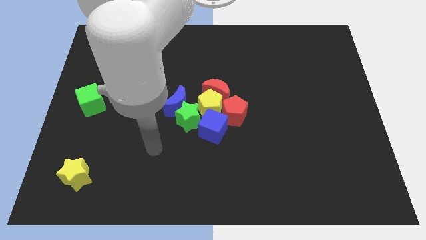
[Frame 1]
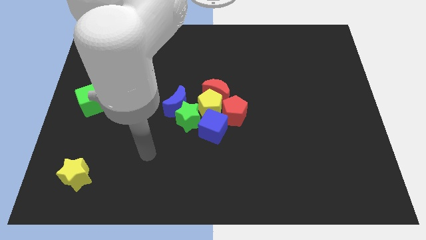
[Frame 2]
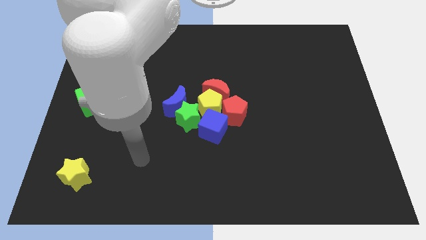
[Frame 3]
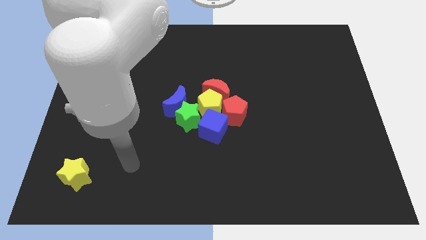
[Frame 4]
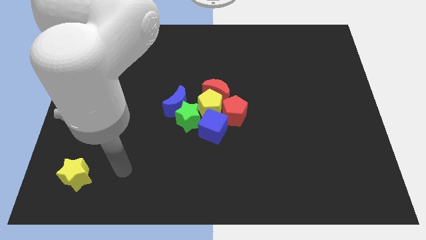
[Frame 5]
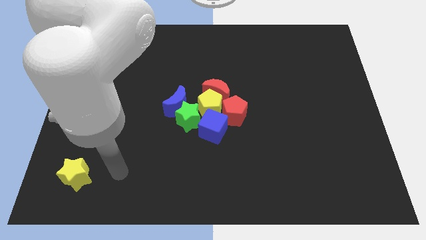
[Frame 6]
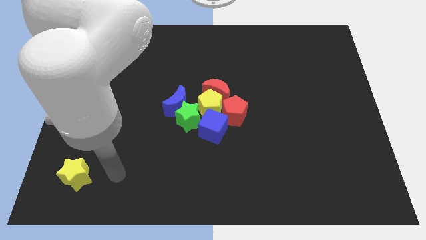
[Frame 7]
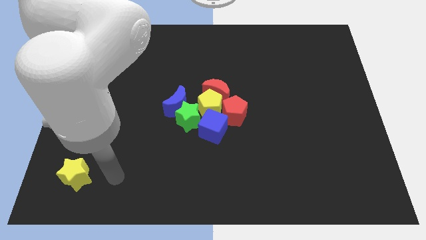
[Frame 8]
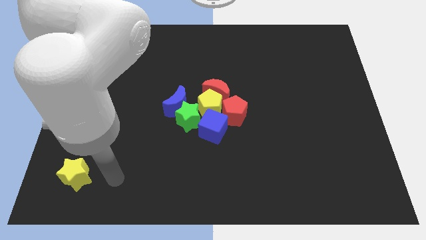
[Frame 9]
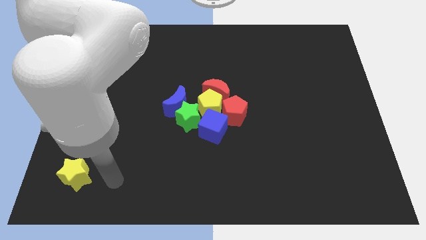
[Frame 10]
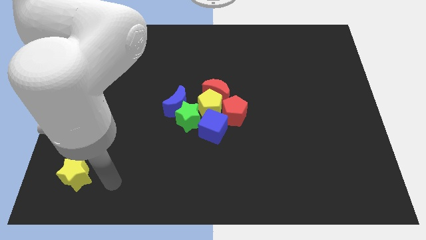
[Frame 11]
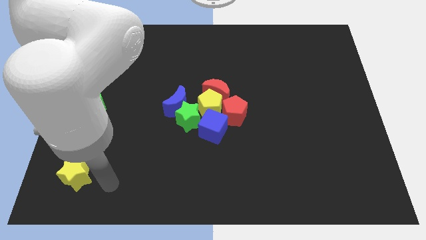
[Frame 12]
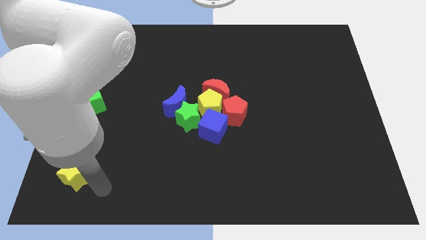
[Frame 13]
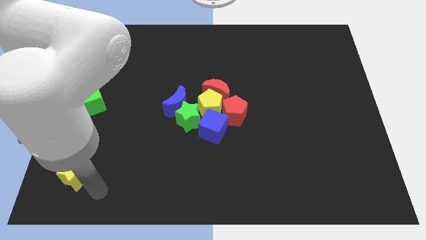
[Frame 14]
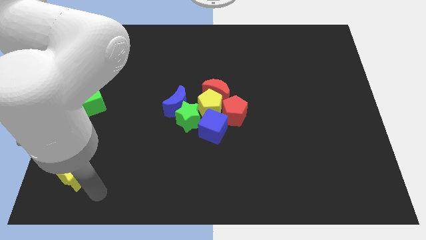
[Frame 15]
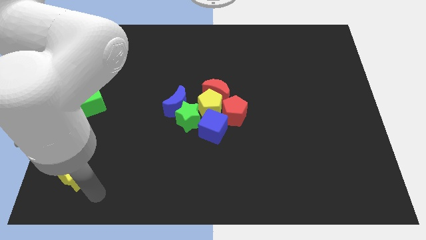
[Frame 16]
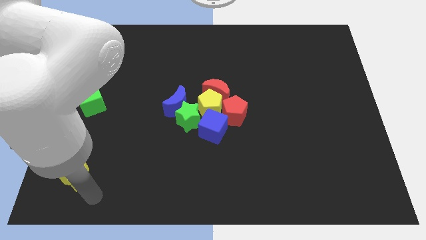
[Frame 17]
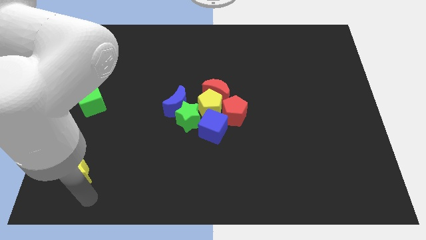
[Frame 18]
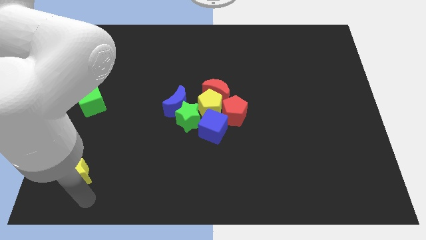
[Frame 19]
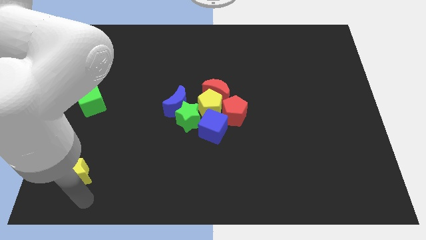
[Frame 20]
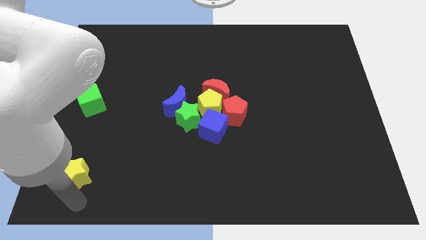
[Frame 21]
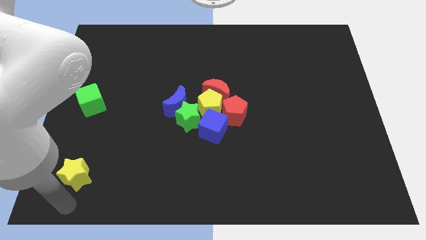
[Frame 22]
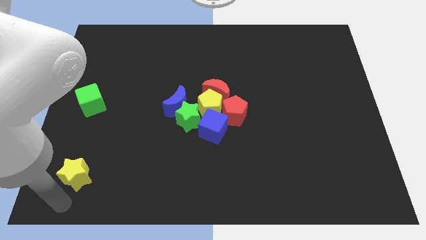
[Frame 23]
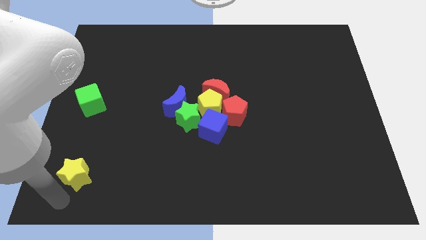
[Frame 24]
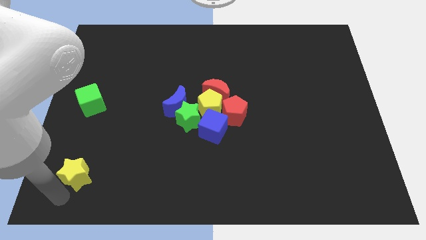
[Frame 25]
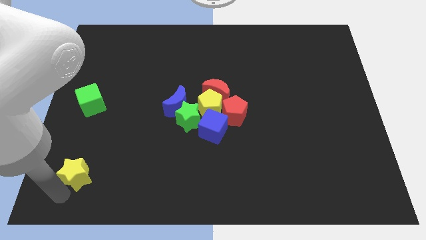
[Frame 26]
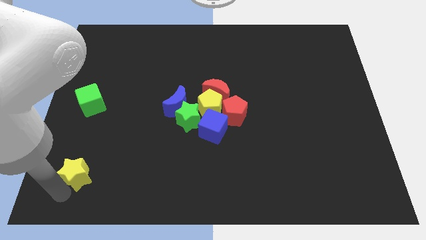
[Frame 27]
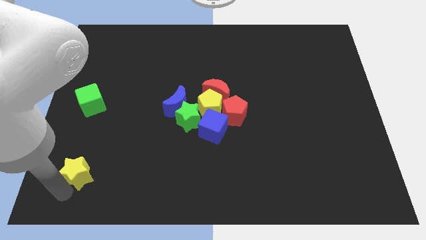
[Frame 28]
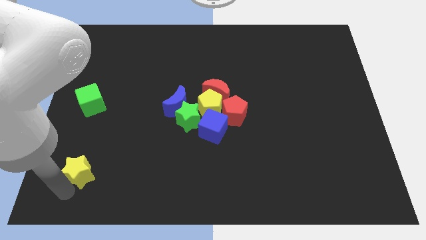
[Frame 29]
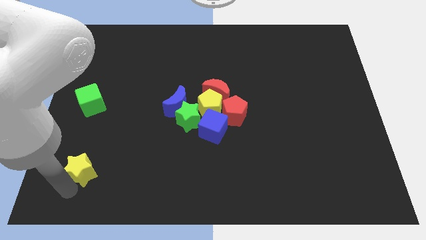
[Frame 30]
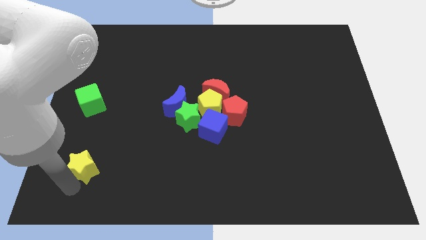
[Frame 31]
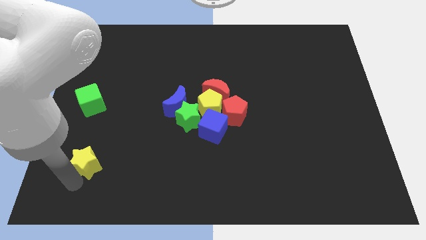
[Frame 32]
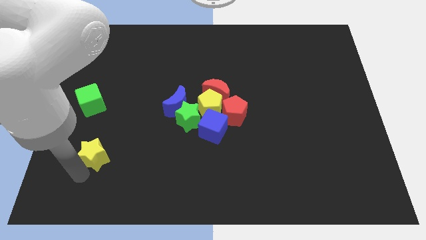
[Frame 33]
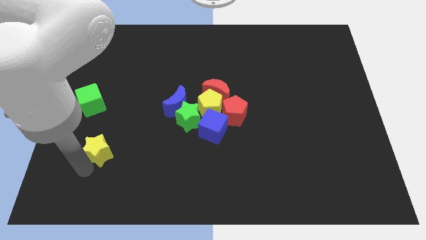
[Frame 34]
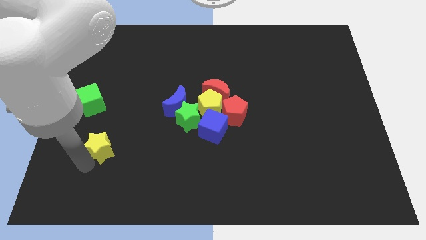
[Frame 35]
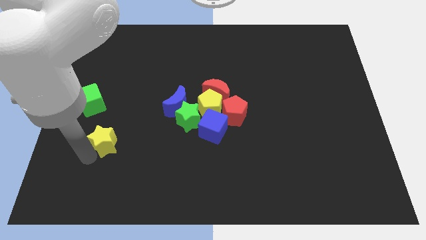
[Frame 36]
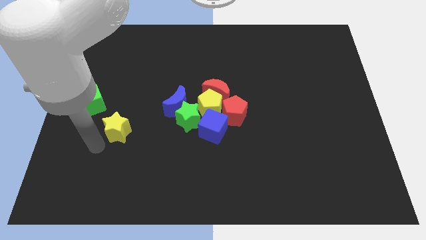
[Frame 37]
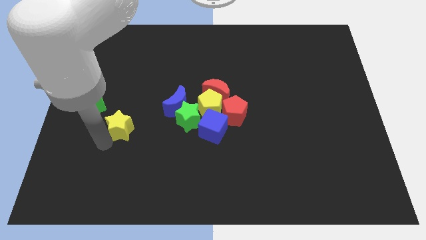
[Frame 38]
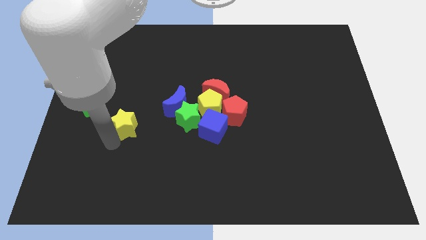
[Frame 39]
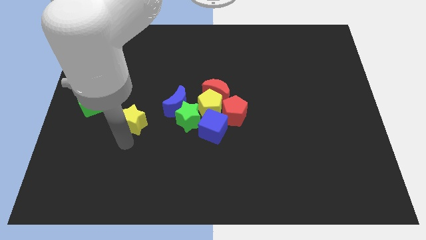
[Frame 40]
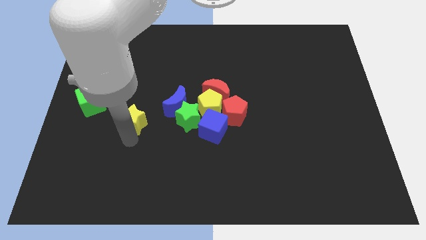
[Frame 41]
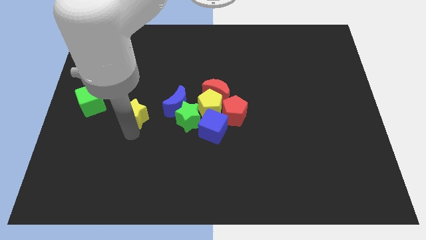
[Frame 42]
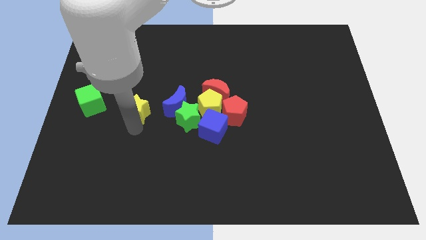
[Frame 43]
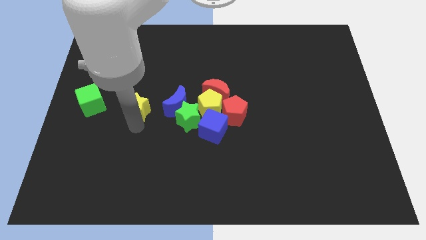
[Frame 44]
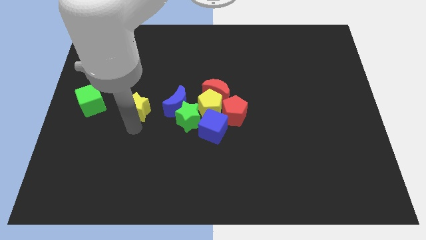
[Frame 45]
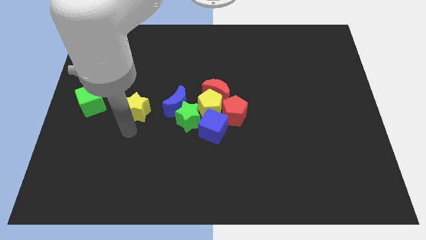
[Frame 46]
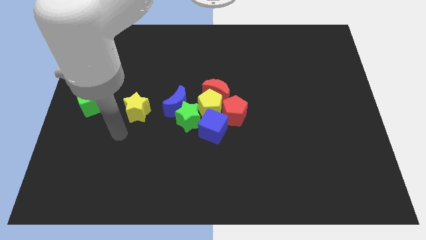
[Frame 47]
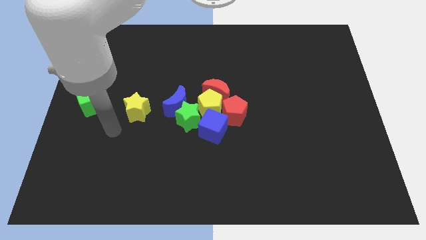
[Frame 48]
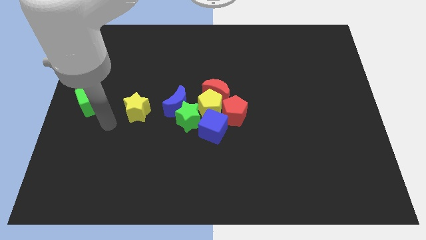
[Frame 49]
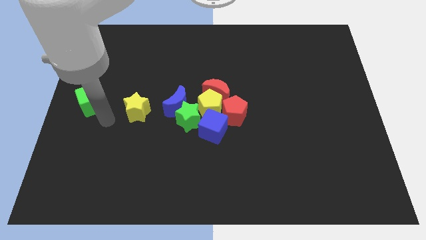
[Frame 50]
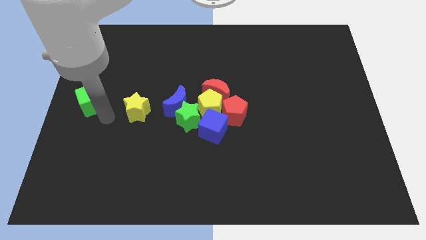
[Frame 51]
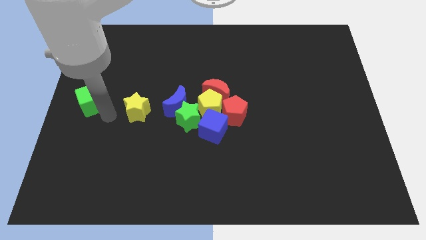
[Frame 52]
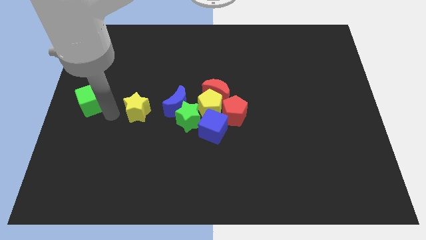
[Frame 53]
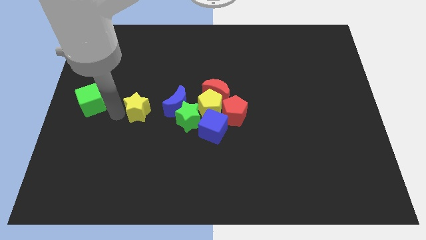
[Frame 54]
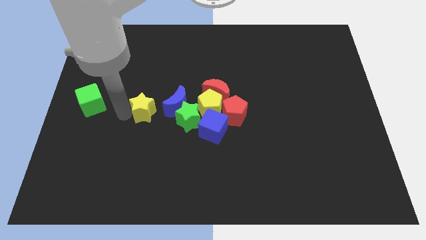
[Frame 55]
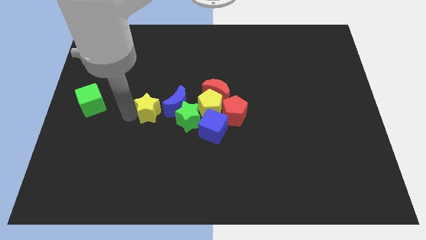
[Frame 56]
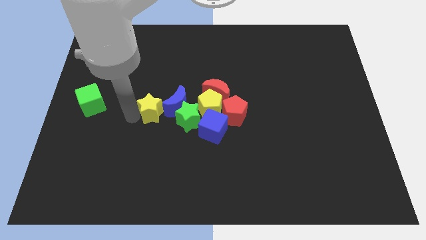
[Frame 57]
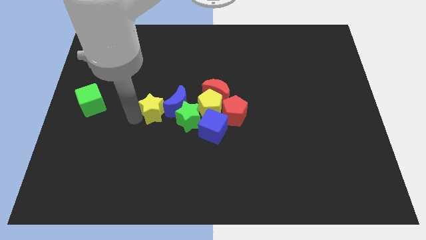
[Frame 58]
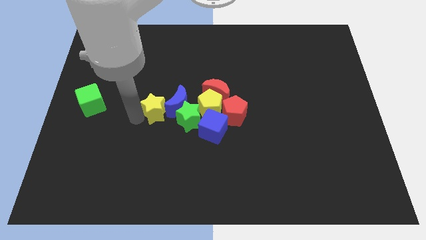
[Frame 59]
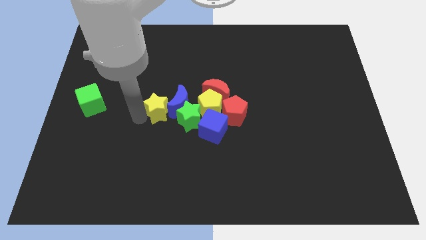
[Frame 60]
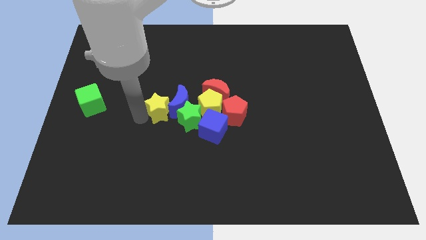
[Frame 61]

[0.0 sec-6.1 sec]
push the yellow star into the blue crescent

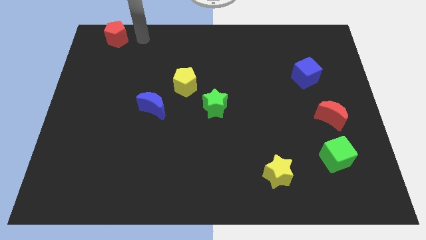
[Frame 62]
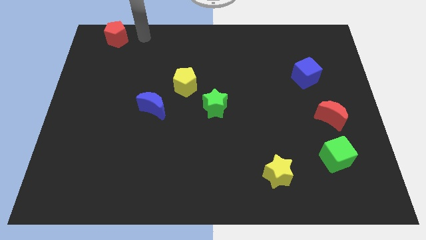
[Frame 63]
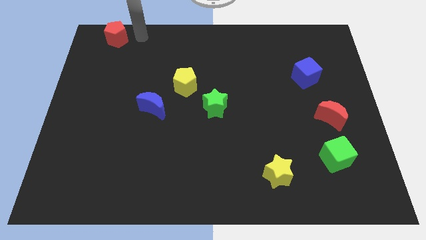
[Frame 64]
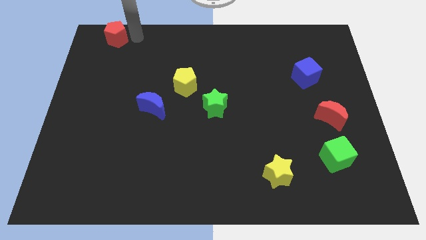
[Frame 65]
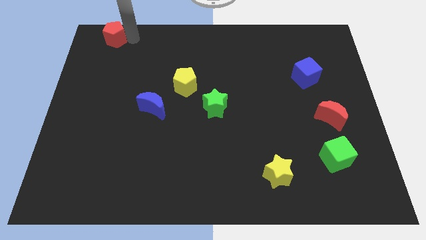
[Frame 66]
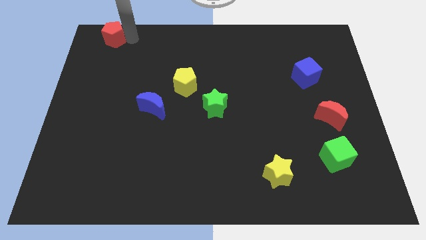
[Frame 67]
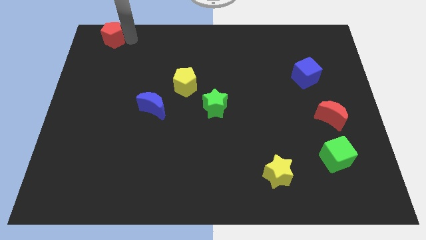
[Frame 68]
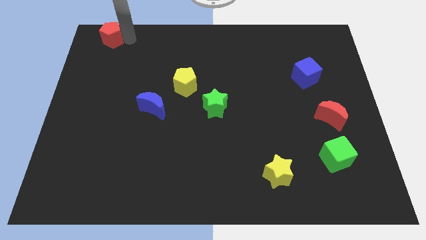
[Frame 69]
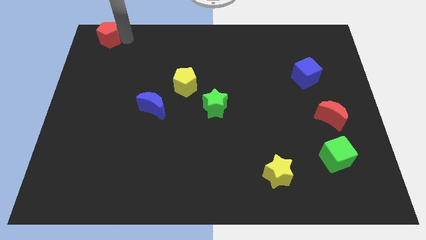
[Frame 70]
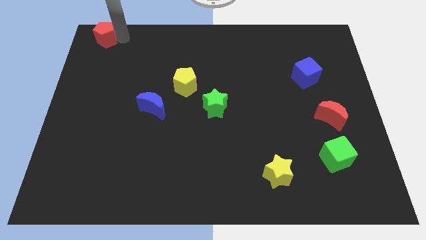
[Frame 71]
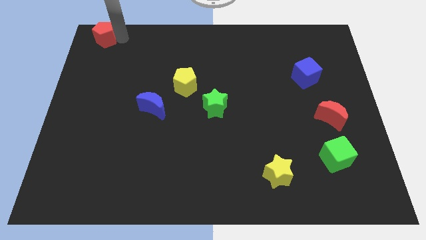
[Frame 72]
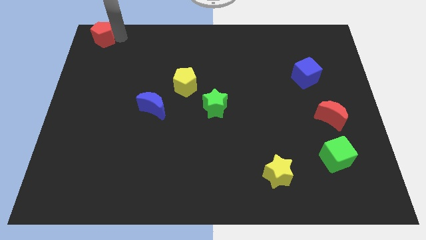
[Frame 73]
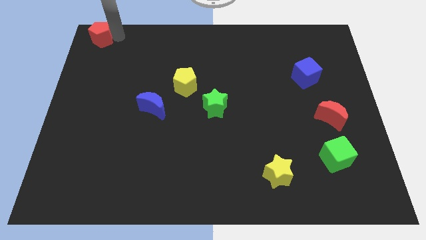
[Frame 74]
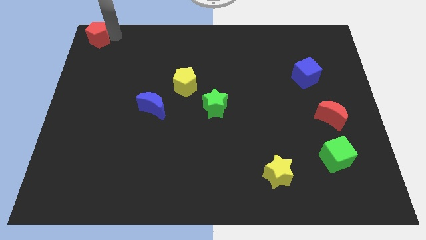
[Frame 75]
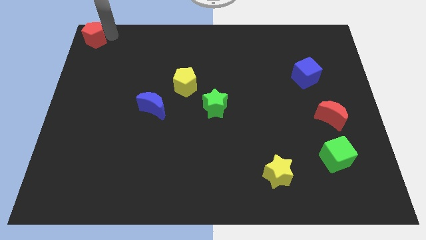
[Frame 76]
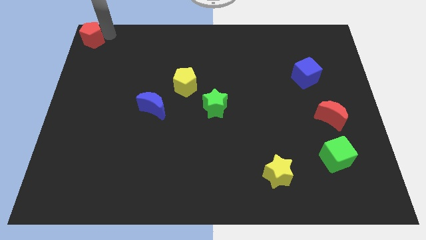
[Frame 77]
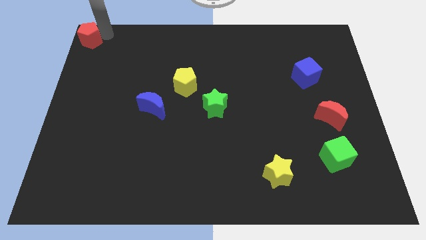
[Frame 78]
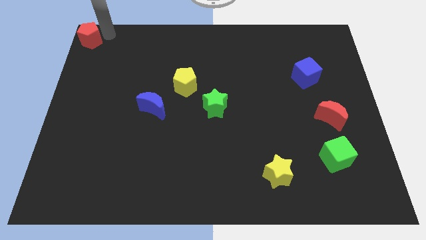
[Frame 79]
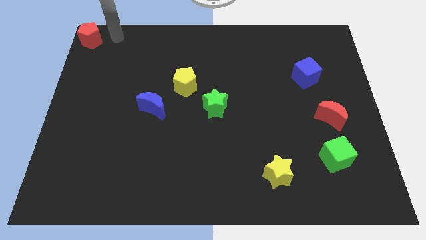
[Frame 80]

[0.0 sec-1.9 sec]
push the red pentagon to the top left corner of the board

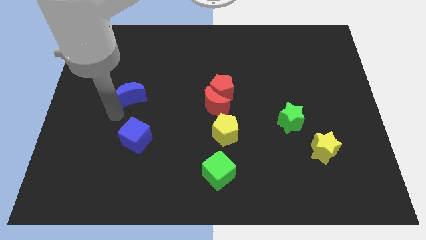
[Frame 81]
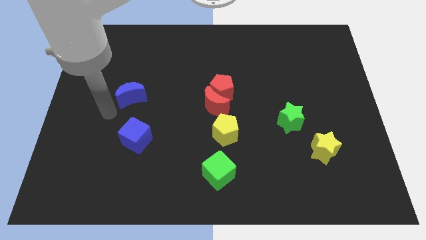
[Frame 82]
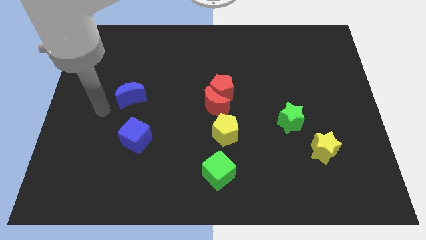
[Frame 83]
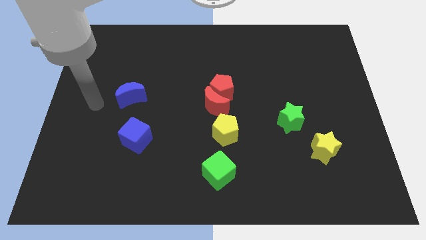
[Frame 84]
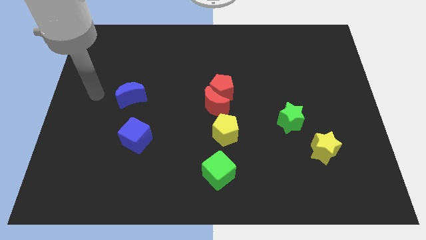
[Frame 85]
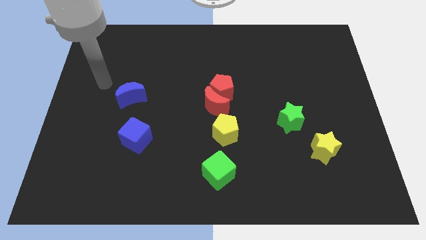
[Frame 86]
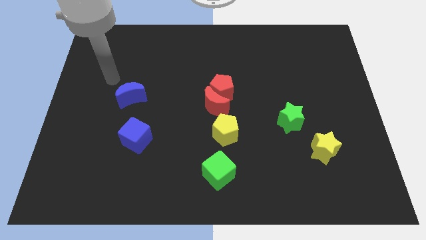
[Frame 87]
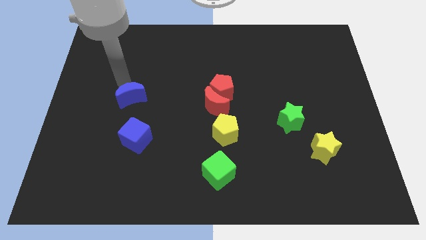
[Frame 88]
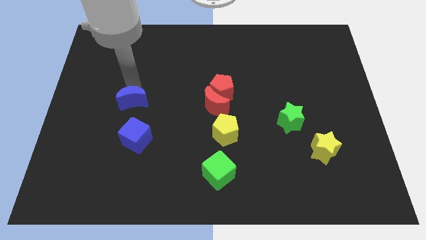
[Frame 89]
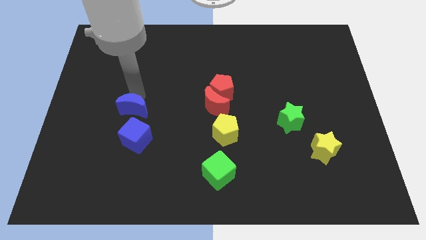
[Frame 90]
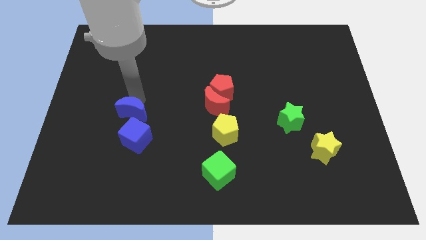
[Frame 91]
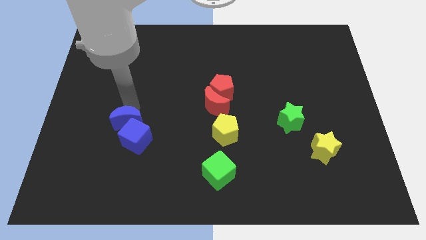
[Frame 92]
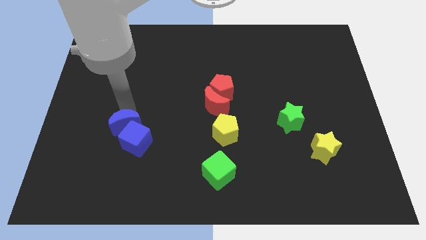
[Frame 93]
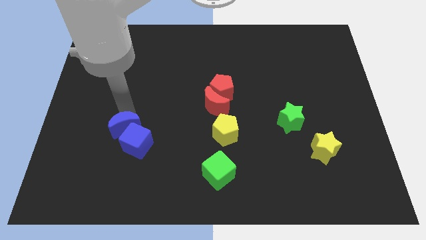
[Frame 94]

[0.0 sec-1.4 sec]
move the blue crescent into the blue cube
